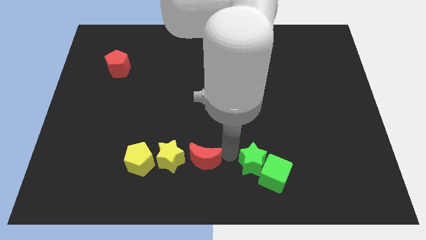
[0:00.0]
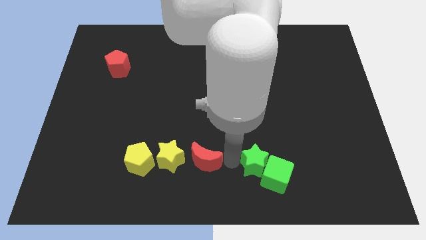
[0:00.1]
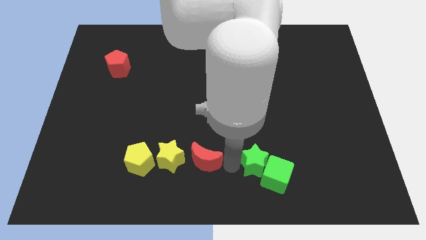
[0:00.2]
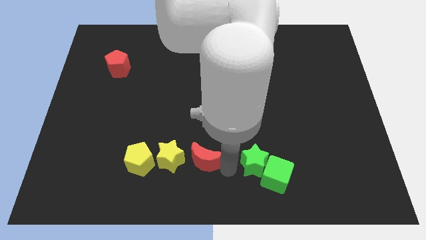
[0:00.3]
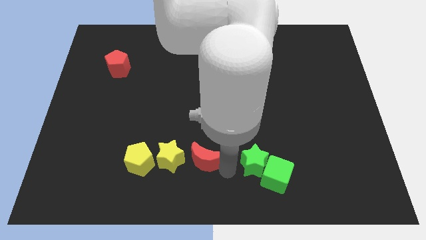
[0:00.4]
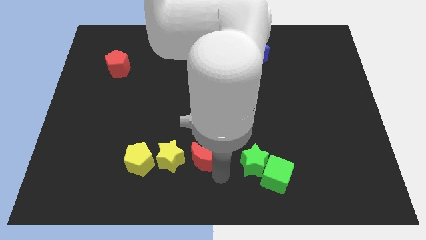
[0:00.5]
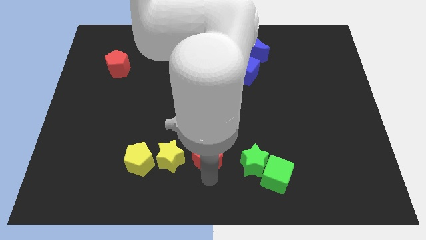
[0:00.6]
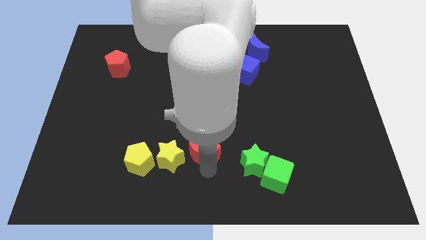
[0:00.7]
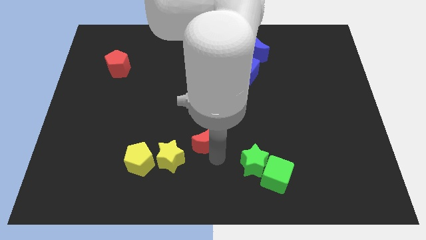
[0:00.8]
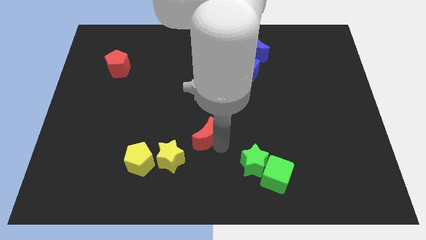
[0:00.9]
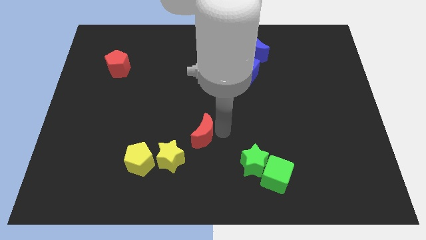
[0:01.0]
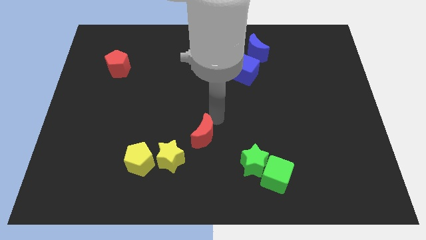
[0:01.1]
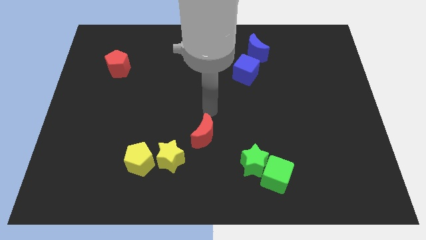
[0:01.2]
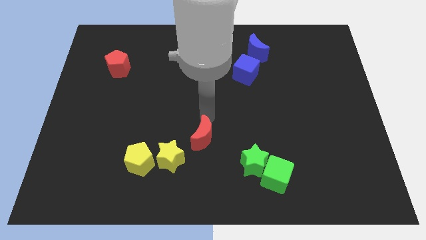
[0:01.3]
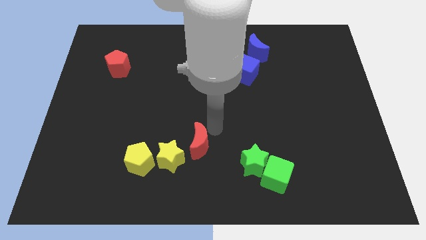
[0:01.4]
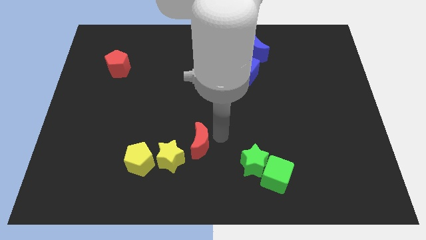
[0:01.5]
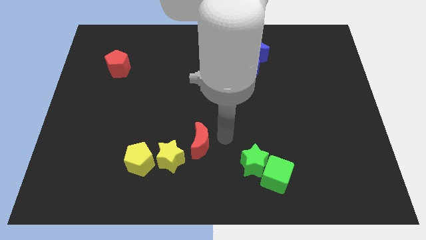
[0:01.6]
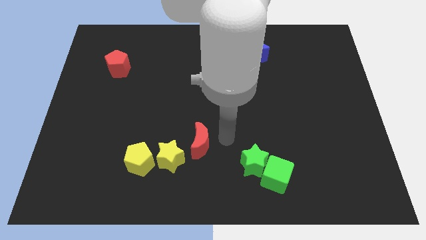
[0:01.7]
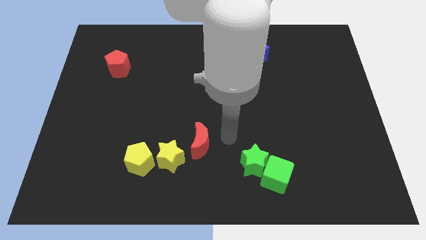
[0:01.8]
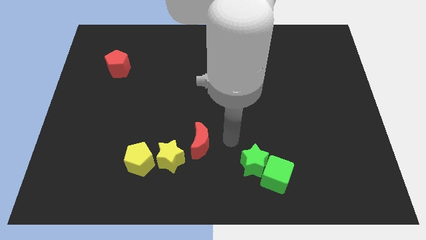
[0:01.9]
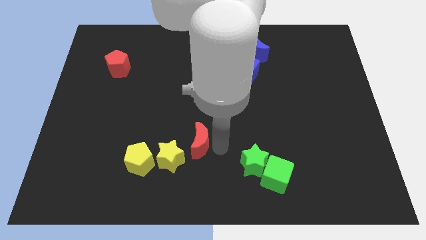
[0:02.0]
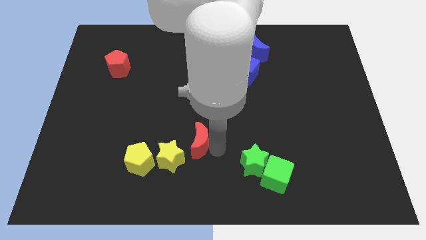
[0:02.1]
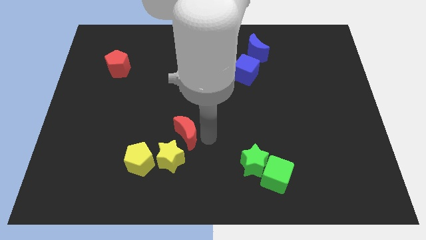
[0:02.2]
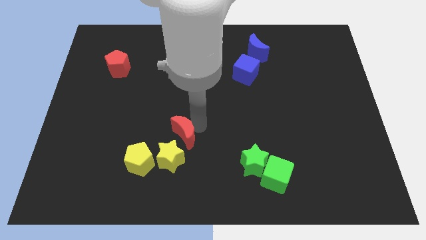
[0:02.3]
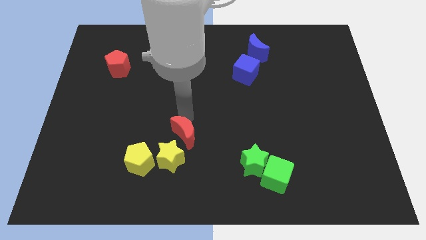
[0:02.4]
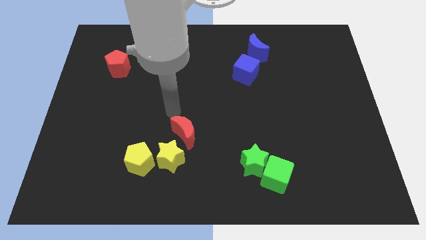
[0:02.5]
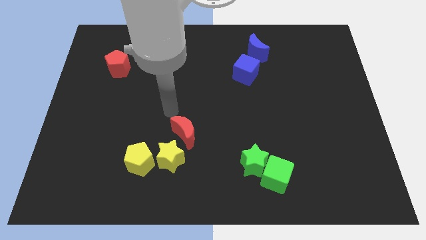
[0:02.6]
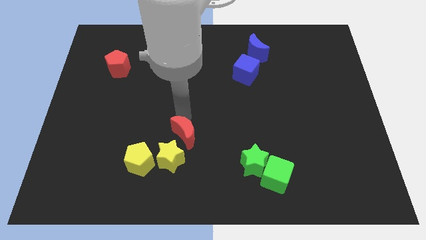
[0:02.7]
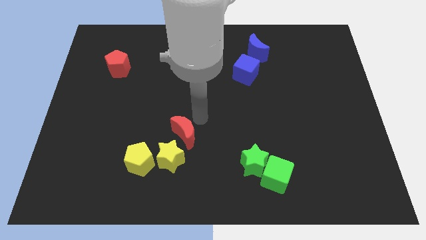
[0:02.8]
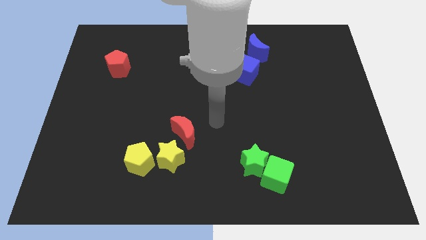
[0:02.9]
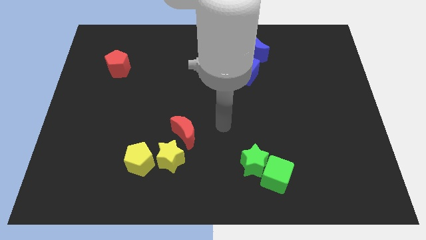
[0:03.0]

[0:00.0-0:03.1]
drag the red moon to the top of the yellow star

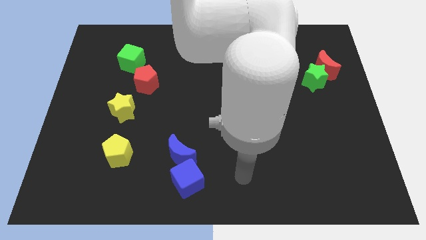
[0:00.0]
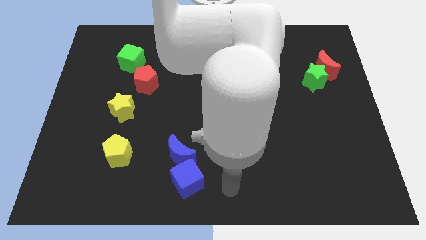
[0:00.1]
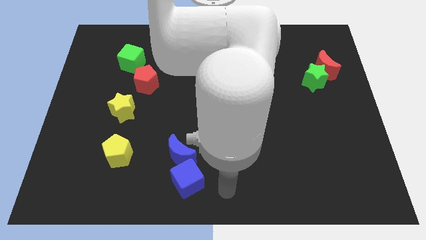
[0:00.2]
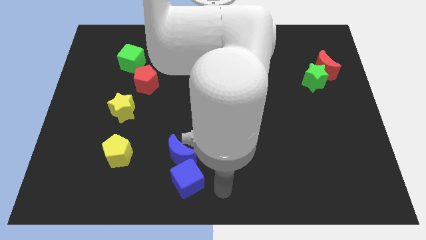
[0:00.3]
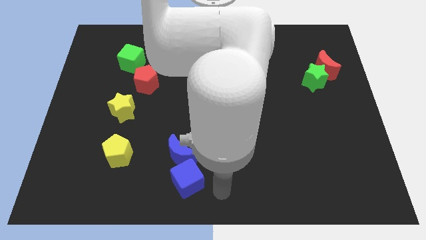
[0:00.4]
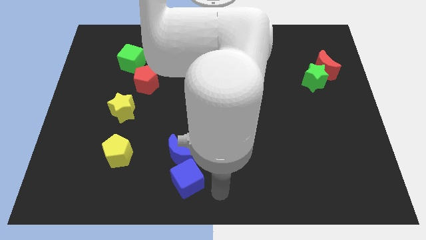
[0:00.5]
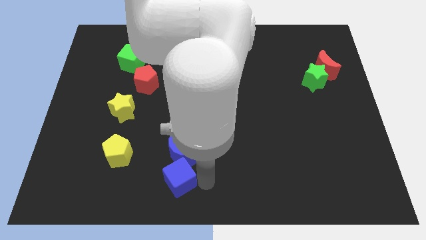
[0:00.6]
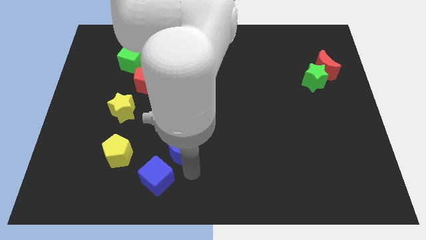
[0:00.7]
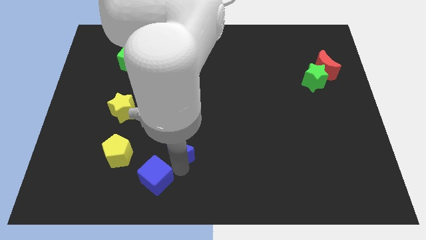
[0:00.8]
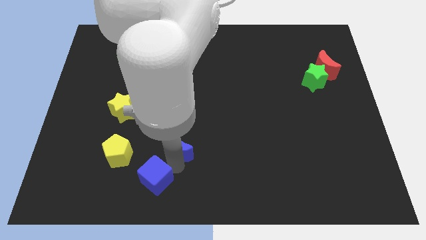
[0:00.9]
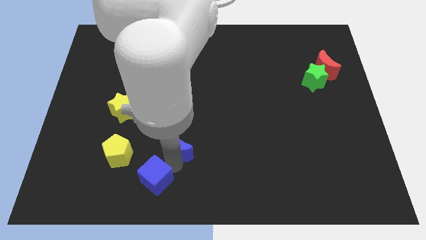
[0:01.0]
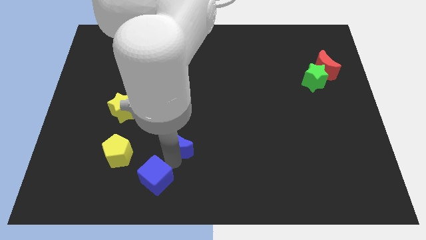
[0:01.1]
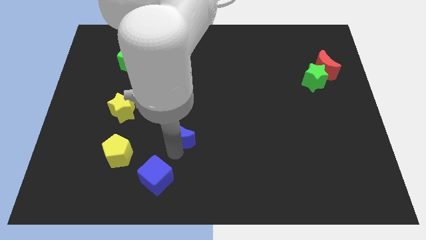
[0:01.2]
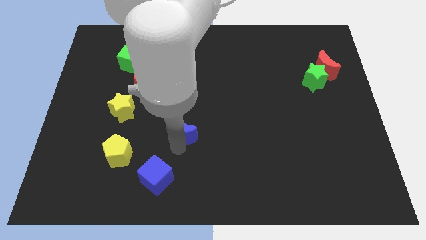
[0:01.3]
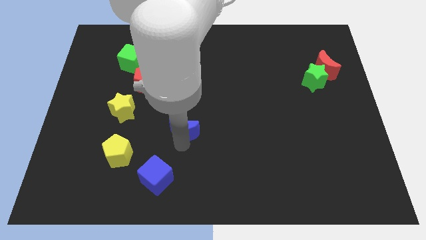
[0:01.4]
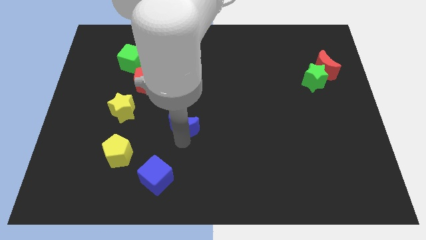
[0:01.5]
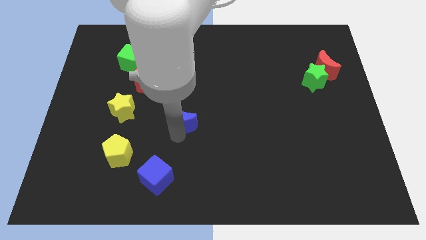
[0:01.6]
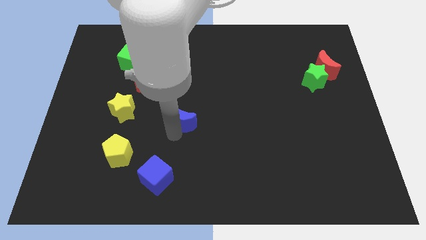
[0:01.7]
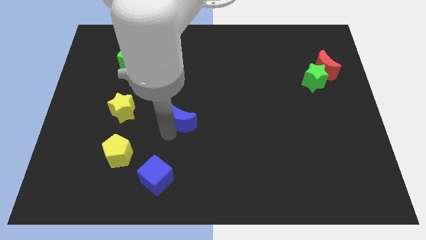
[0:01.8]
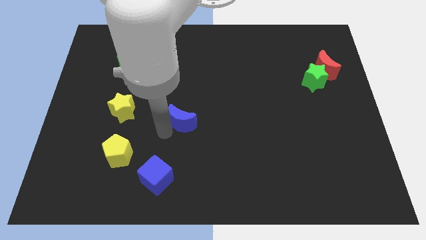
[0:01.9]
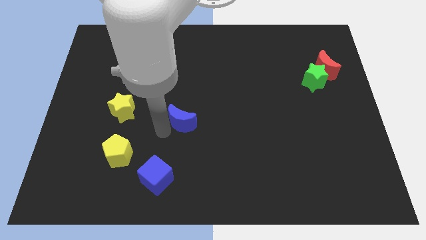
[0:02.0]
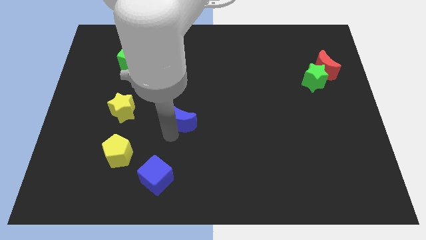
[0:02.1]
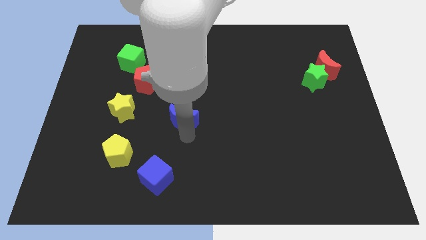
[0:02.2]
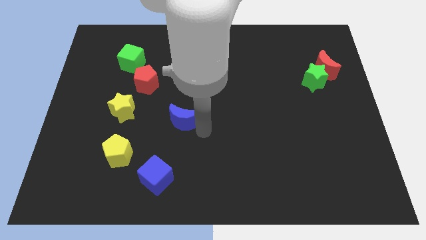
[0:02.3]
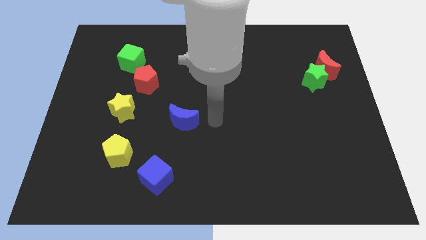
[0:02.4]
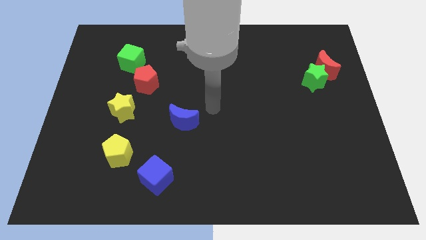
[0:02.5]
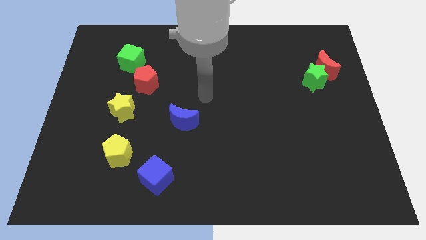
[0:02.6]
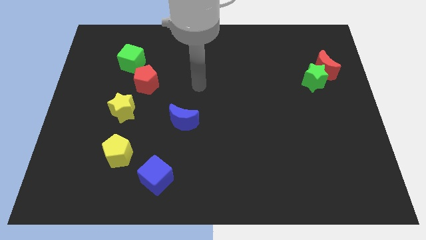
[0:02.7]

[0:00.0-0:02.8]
move blue moon upwards

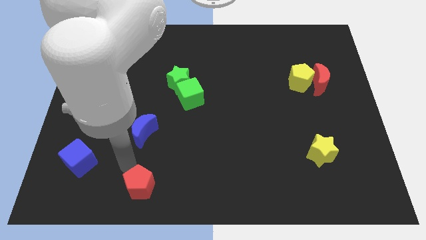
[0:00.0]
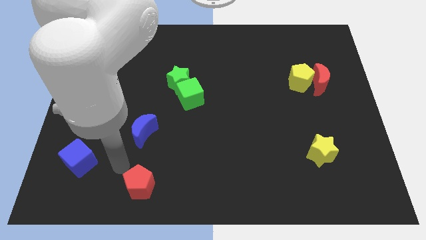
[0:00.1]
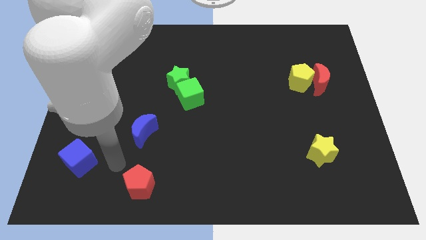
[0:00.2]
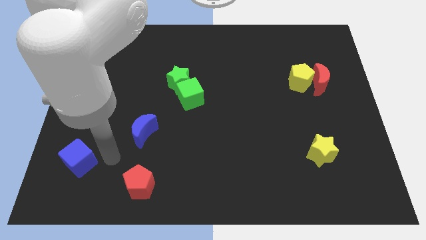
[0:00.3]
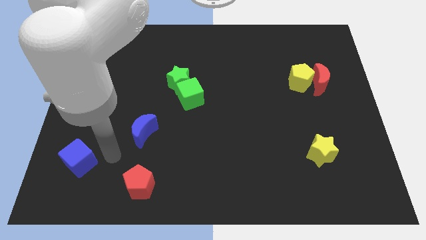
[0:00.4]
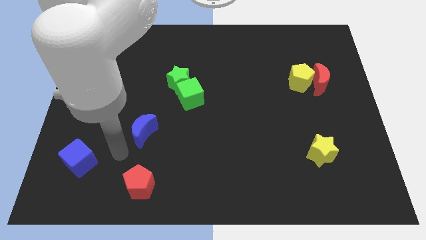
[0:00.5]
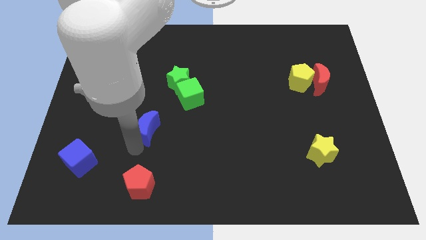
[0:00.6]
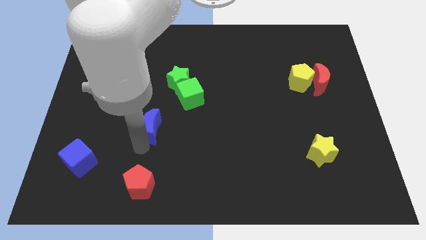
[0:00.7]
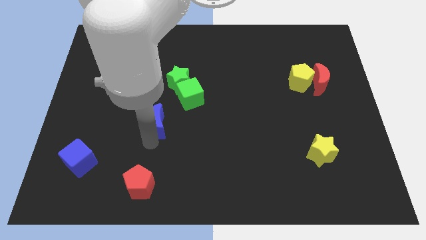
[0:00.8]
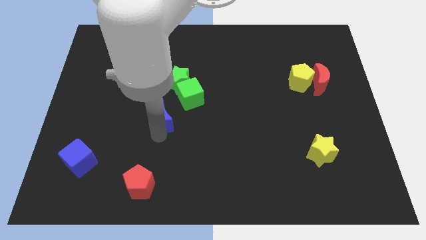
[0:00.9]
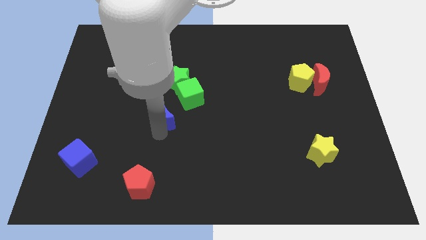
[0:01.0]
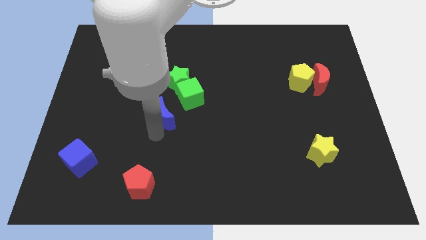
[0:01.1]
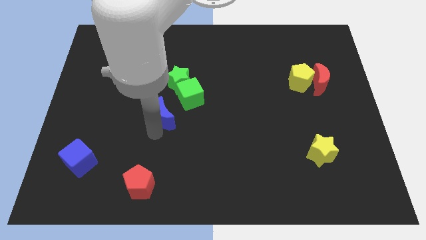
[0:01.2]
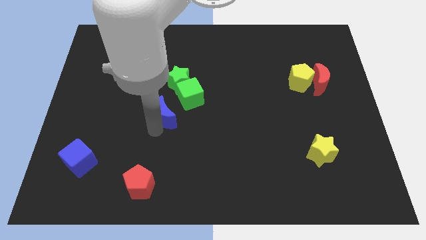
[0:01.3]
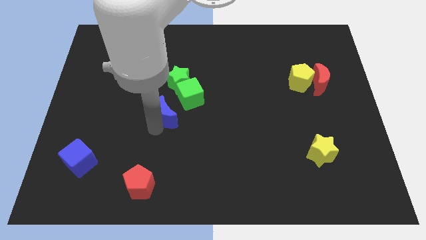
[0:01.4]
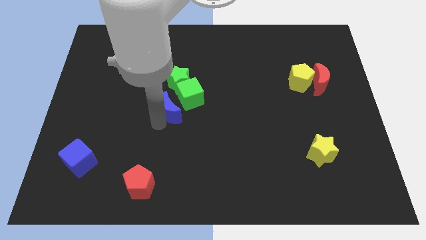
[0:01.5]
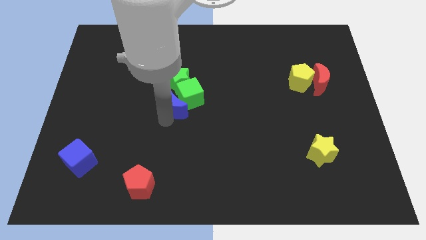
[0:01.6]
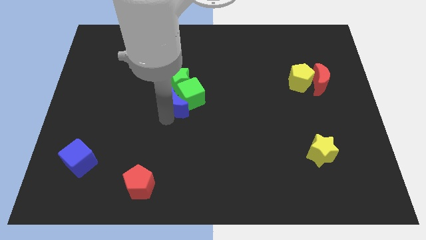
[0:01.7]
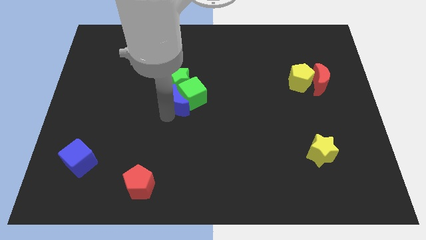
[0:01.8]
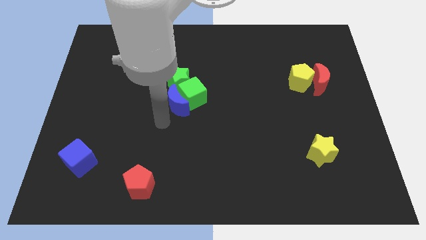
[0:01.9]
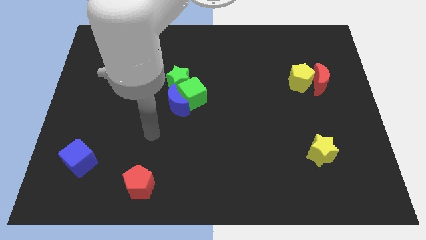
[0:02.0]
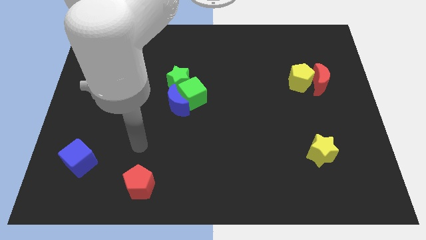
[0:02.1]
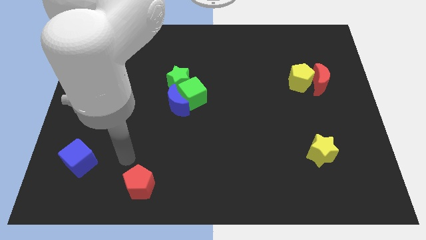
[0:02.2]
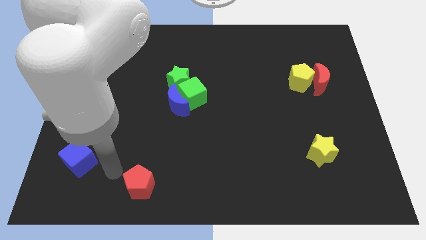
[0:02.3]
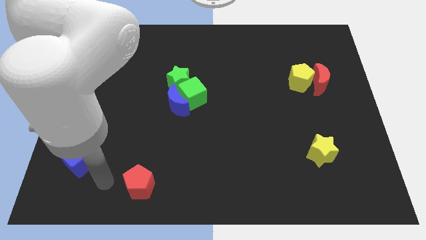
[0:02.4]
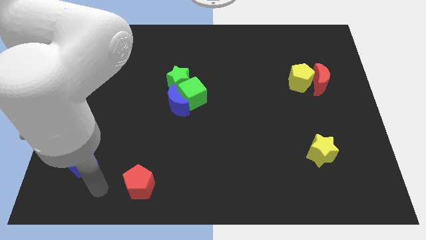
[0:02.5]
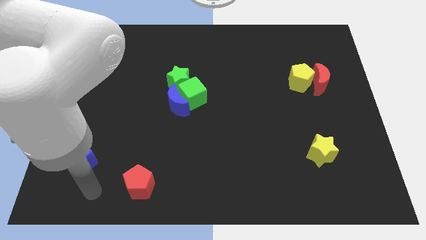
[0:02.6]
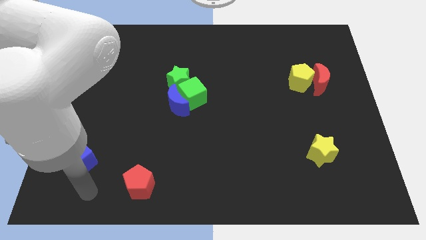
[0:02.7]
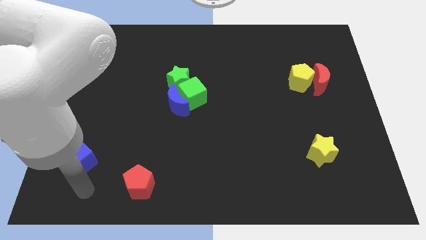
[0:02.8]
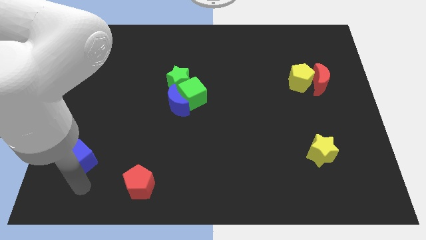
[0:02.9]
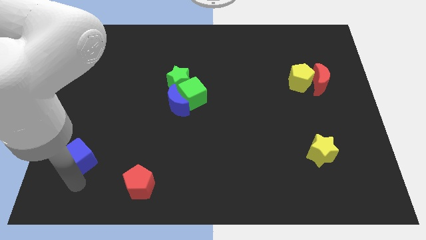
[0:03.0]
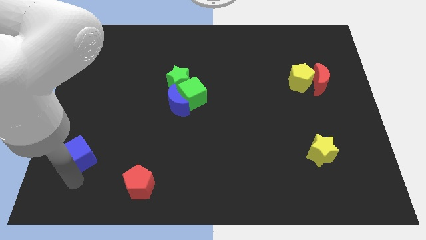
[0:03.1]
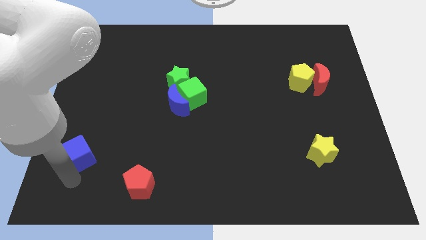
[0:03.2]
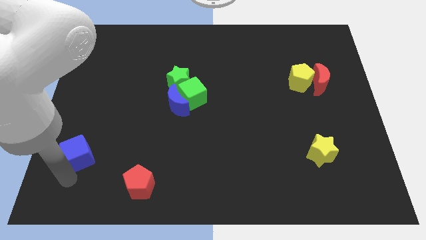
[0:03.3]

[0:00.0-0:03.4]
push the blue moon into the green cube
